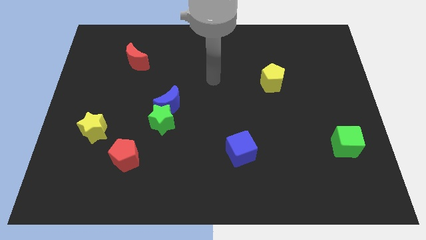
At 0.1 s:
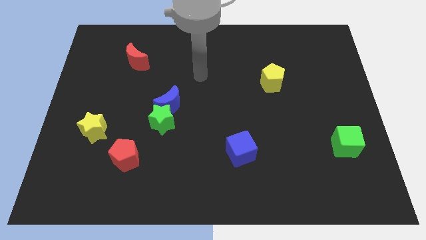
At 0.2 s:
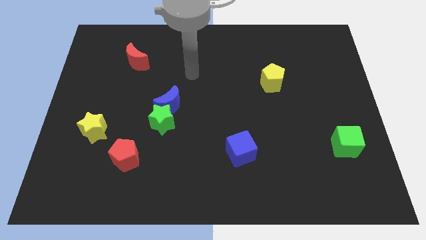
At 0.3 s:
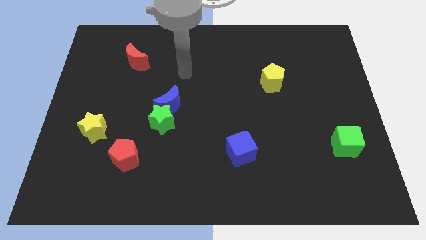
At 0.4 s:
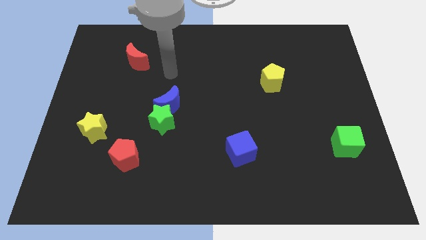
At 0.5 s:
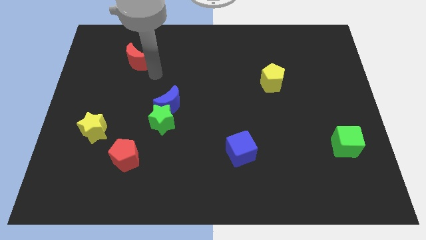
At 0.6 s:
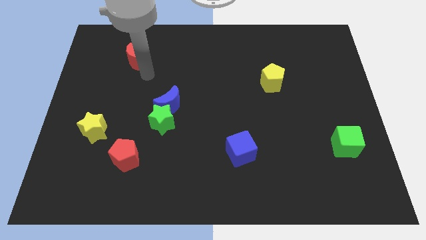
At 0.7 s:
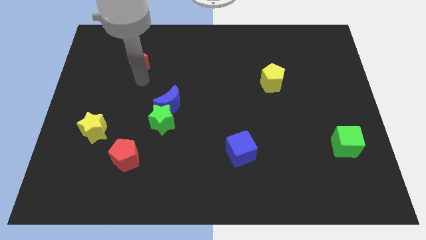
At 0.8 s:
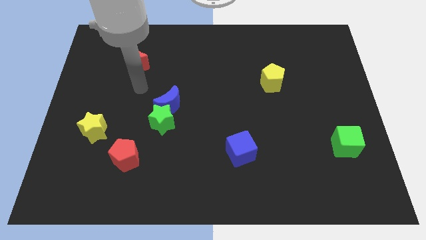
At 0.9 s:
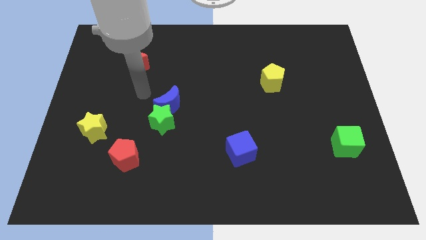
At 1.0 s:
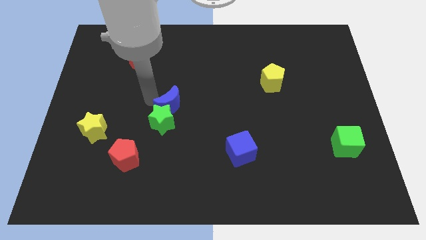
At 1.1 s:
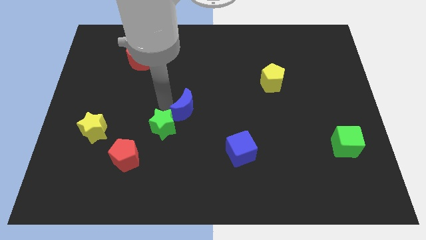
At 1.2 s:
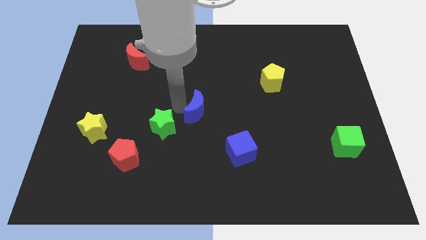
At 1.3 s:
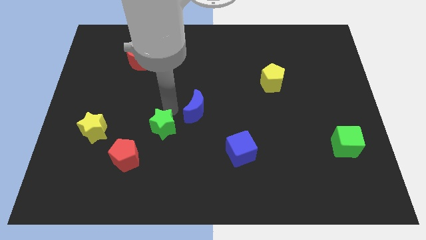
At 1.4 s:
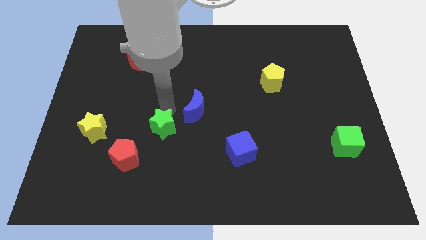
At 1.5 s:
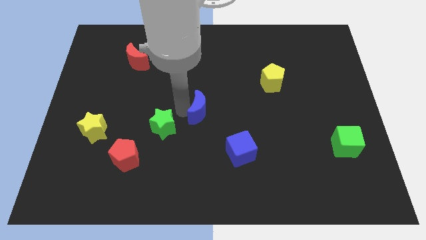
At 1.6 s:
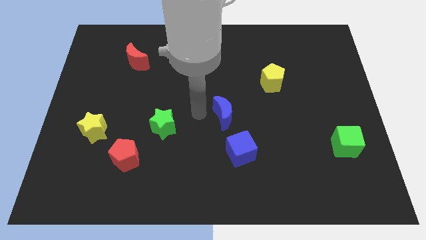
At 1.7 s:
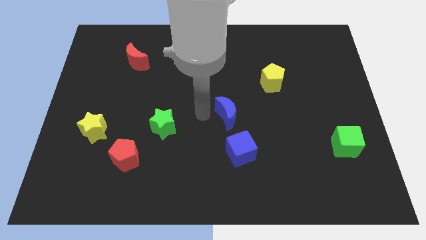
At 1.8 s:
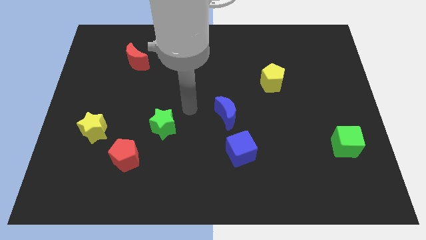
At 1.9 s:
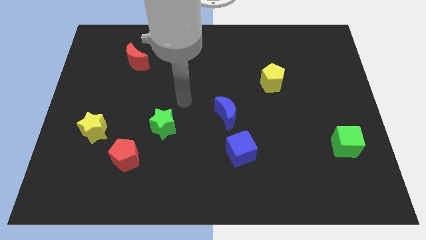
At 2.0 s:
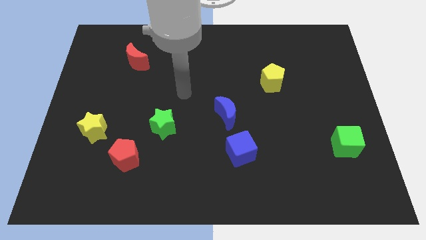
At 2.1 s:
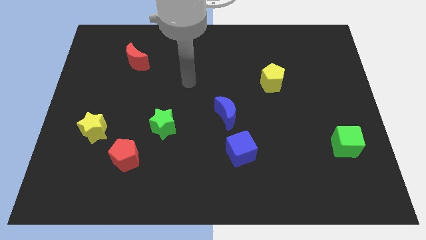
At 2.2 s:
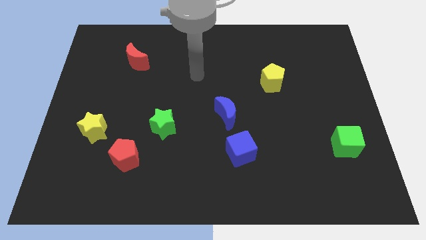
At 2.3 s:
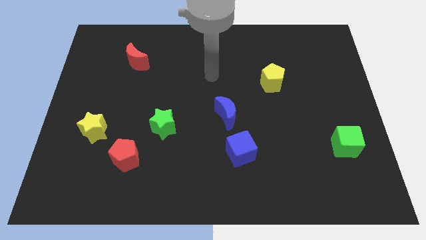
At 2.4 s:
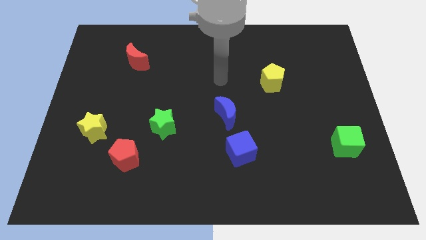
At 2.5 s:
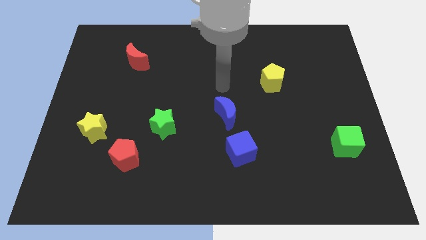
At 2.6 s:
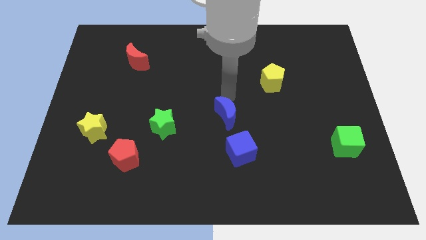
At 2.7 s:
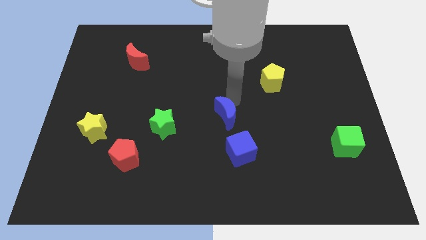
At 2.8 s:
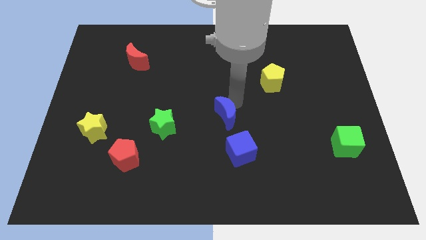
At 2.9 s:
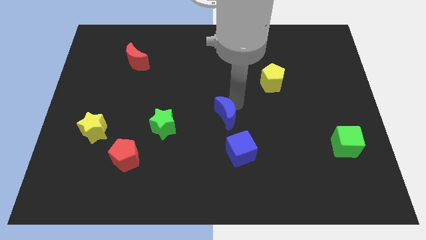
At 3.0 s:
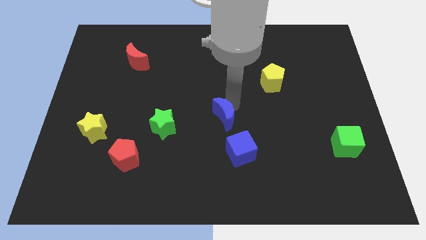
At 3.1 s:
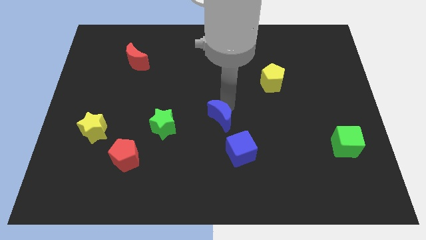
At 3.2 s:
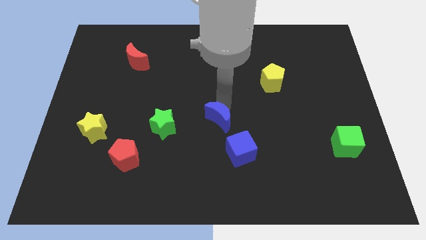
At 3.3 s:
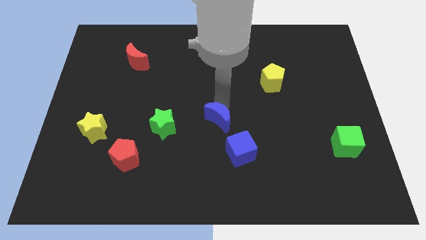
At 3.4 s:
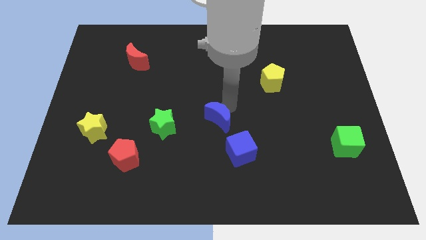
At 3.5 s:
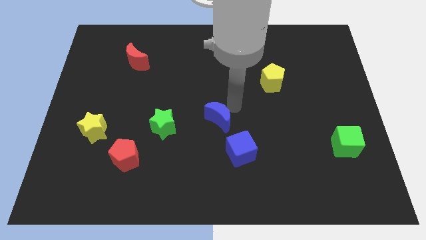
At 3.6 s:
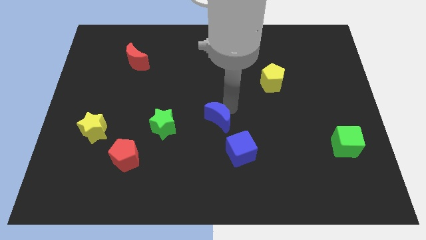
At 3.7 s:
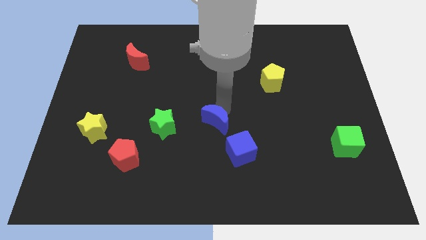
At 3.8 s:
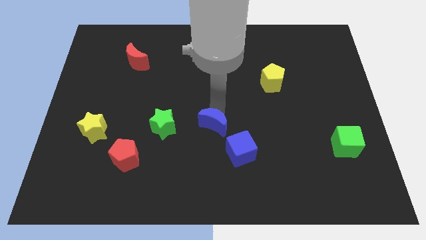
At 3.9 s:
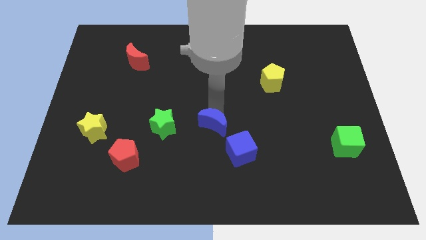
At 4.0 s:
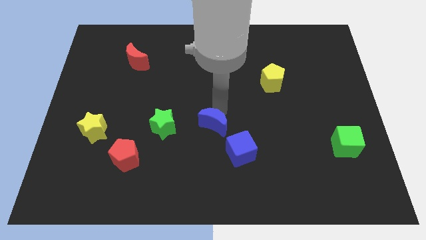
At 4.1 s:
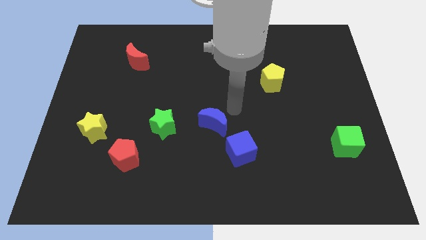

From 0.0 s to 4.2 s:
separate the blue moon from the green star

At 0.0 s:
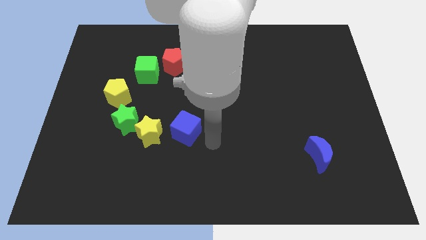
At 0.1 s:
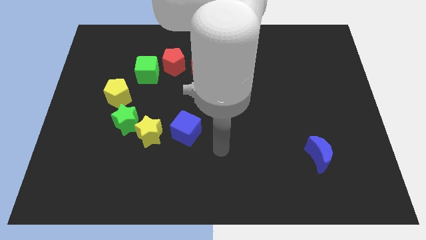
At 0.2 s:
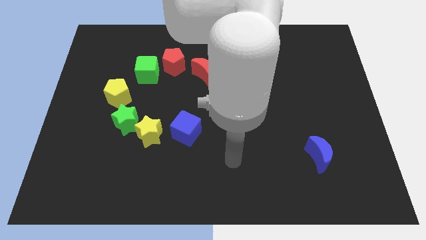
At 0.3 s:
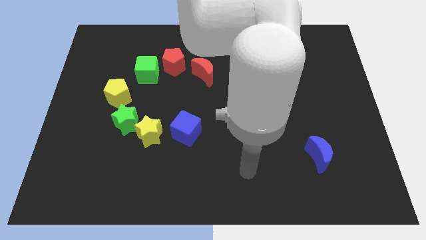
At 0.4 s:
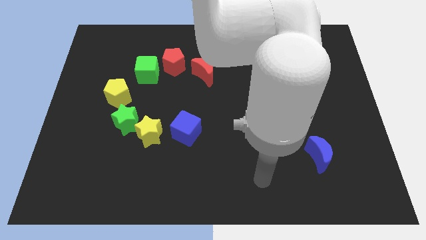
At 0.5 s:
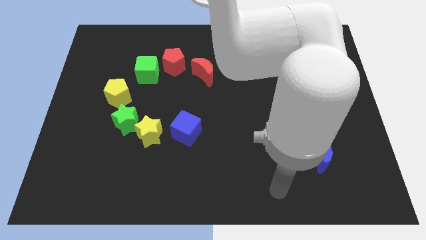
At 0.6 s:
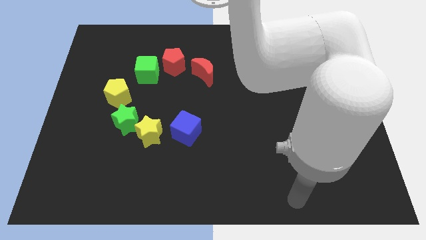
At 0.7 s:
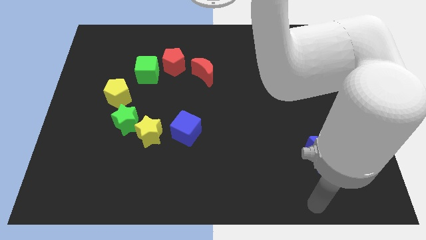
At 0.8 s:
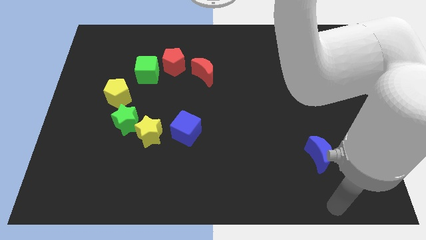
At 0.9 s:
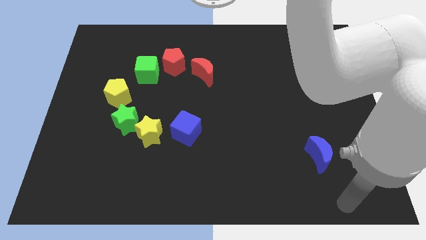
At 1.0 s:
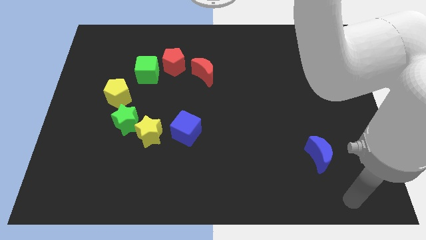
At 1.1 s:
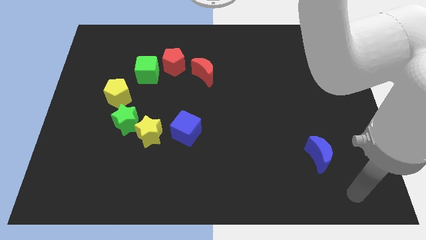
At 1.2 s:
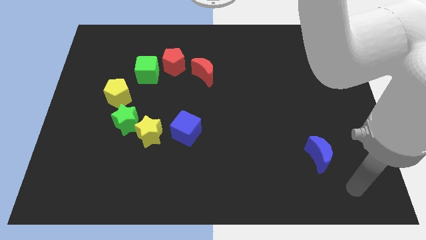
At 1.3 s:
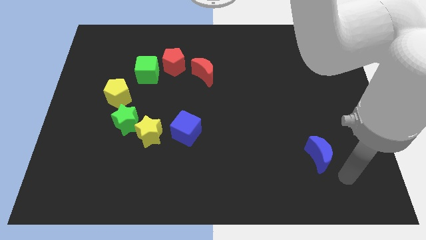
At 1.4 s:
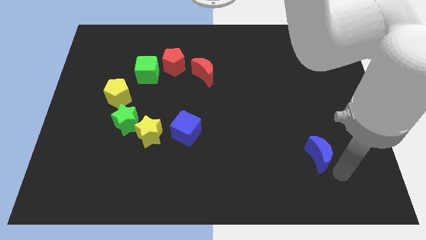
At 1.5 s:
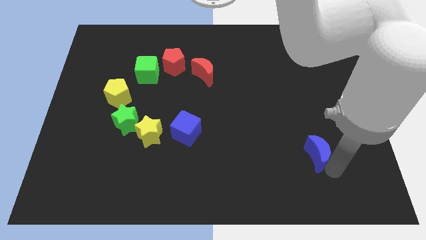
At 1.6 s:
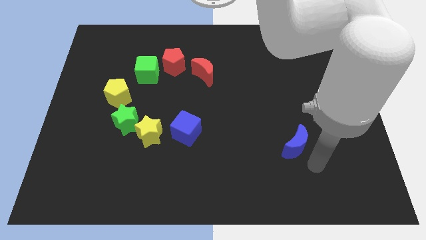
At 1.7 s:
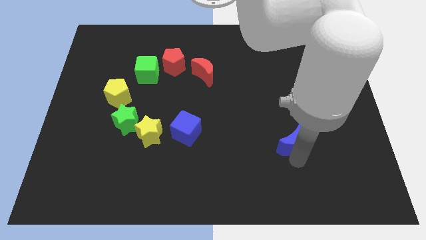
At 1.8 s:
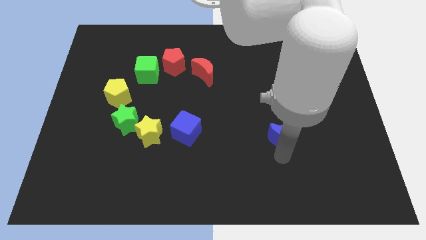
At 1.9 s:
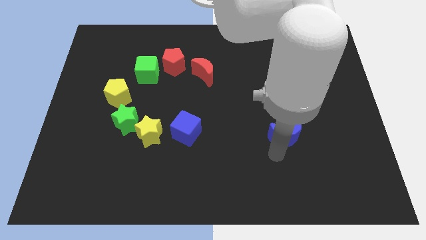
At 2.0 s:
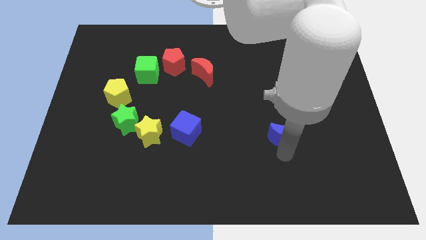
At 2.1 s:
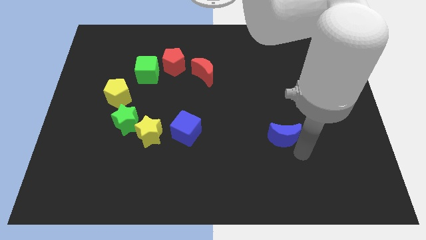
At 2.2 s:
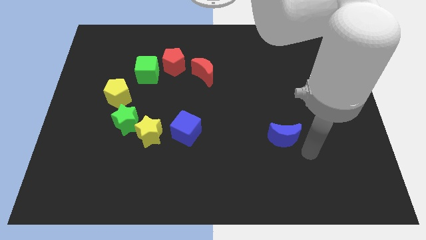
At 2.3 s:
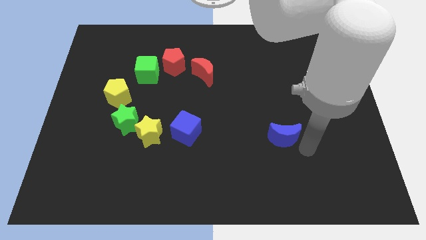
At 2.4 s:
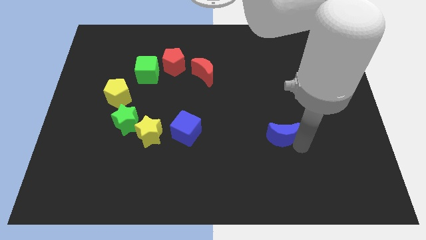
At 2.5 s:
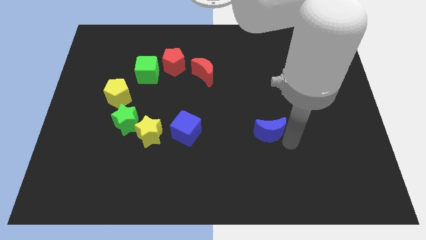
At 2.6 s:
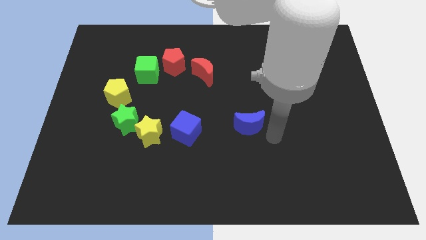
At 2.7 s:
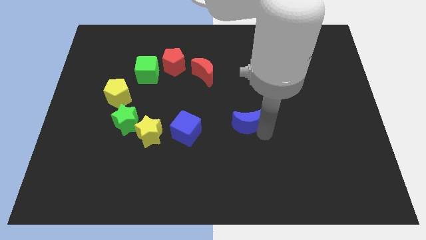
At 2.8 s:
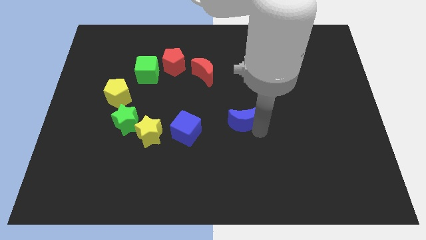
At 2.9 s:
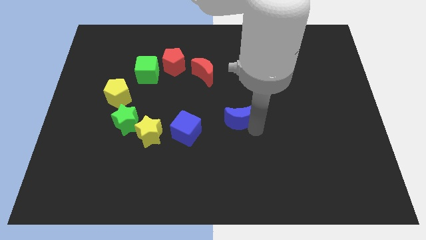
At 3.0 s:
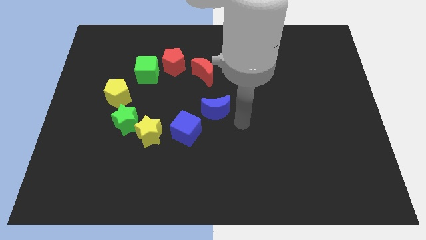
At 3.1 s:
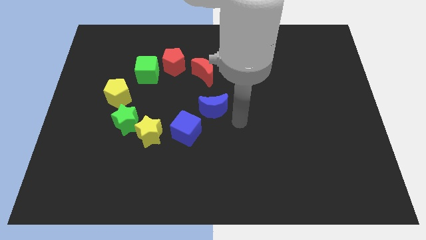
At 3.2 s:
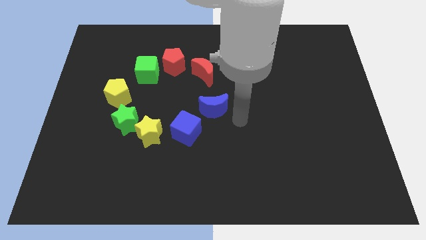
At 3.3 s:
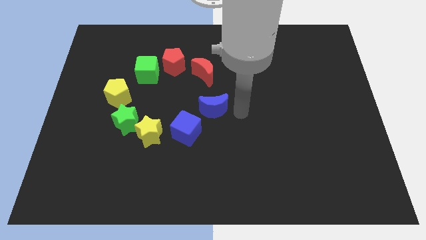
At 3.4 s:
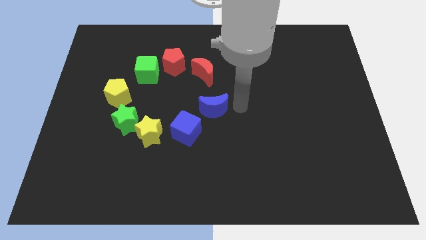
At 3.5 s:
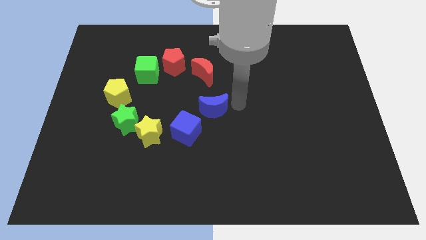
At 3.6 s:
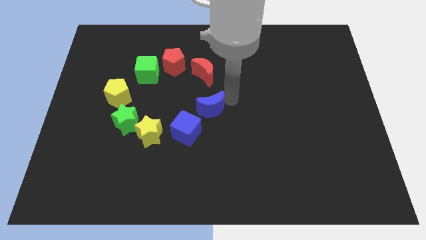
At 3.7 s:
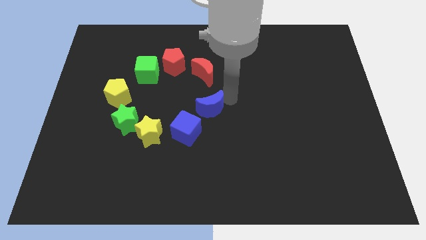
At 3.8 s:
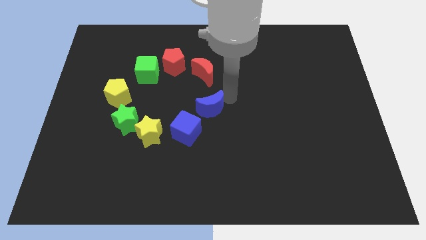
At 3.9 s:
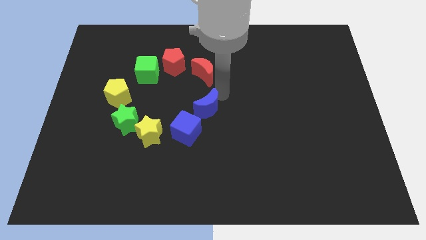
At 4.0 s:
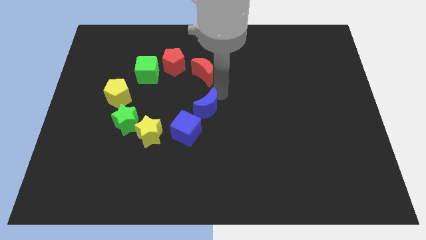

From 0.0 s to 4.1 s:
move the blue crescent to the bottom of the red crescent

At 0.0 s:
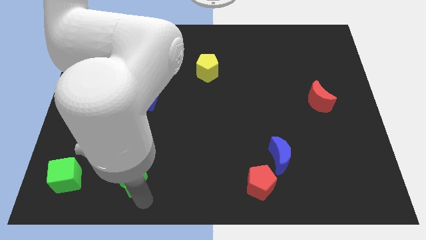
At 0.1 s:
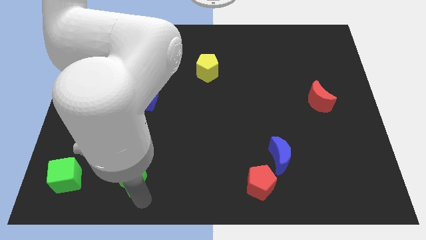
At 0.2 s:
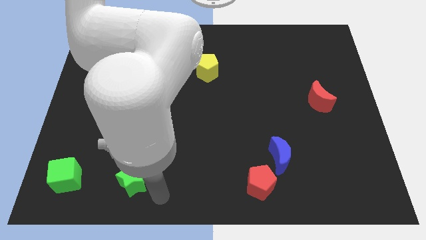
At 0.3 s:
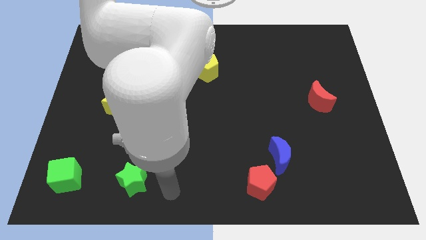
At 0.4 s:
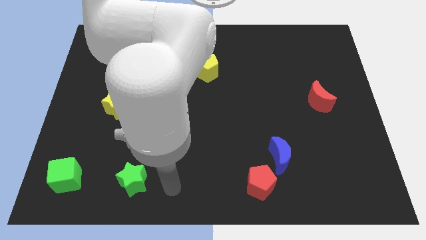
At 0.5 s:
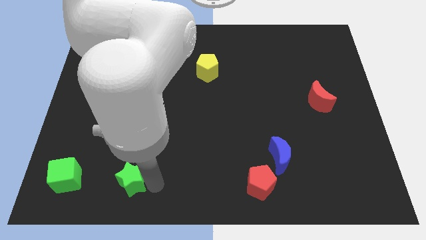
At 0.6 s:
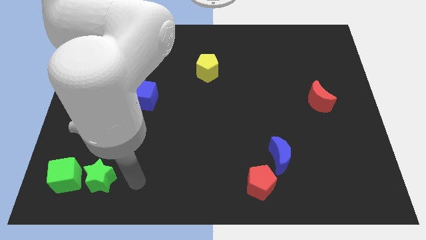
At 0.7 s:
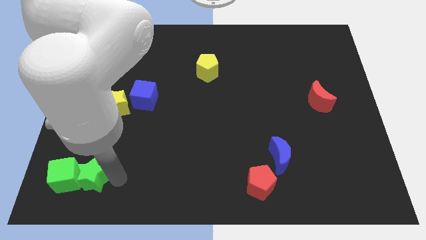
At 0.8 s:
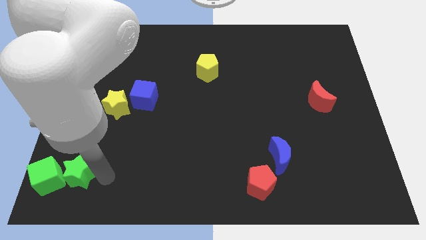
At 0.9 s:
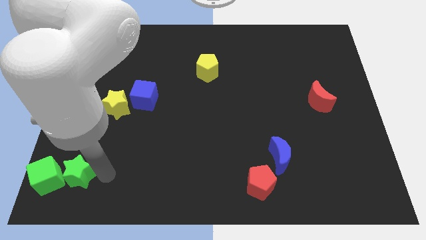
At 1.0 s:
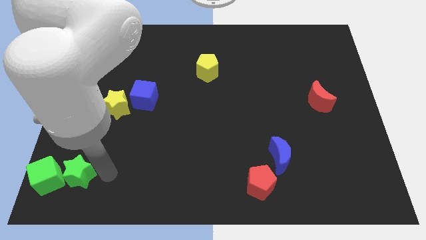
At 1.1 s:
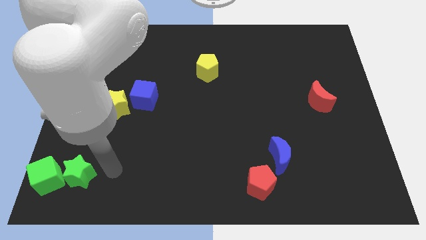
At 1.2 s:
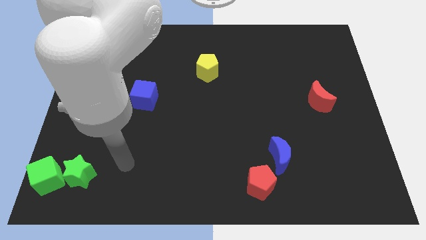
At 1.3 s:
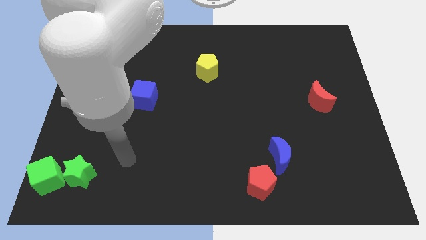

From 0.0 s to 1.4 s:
move green star into the green cube
